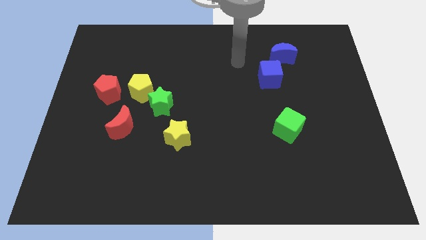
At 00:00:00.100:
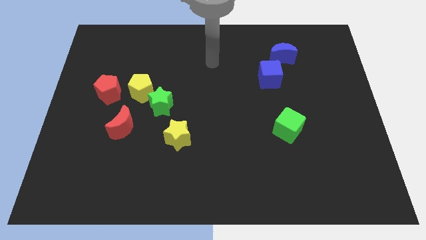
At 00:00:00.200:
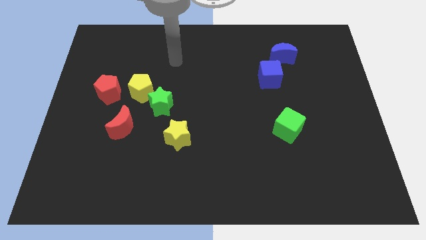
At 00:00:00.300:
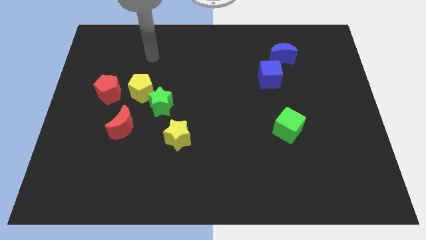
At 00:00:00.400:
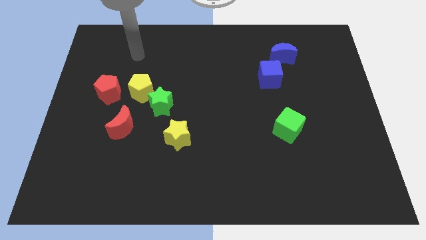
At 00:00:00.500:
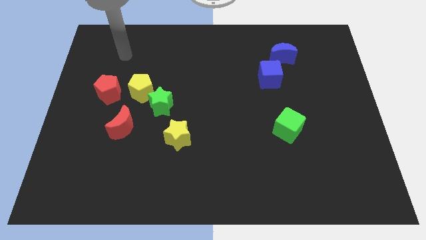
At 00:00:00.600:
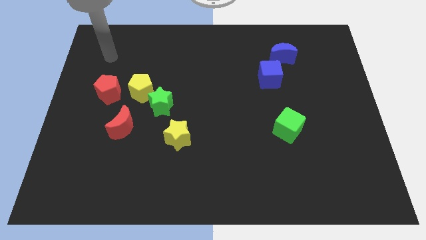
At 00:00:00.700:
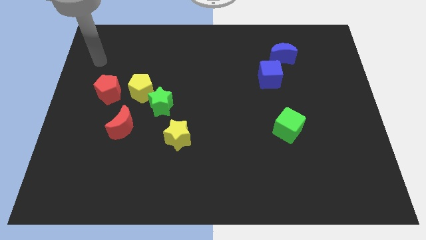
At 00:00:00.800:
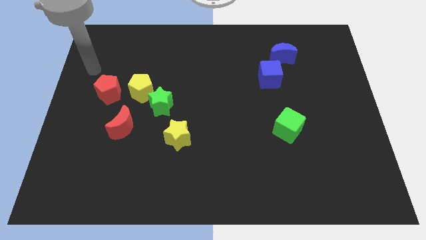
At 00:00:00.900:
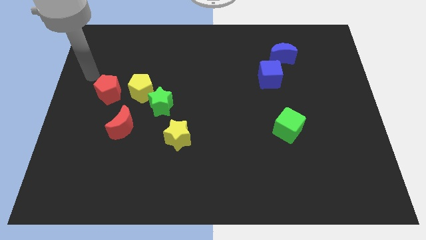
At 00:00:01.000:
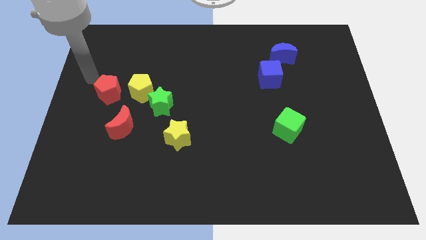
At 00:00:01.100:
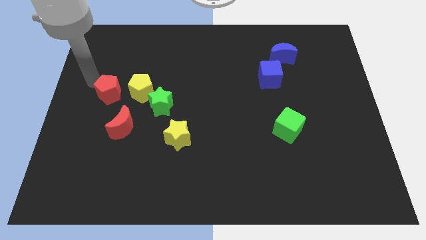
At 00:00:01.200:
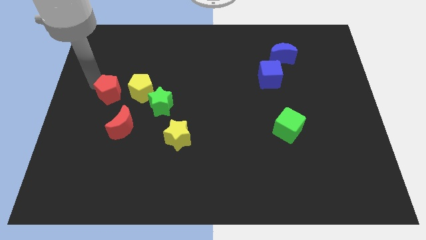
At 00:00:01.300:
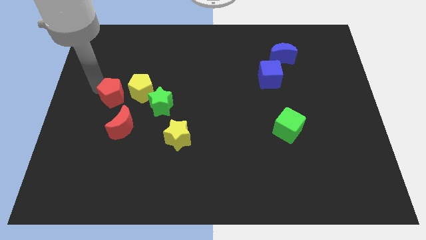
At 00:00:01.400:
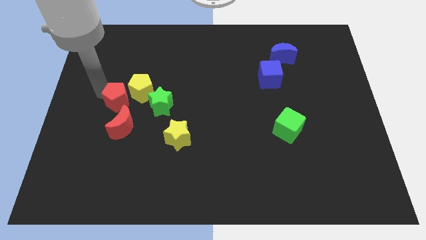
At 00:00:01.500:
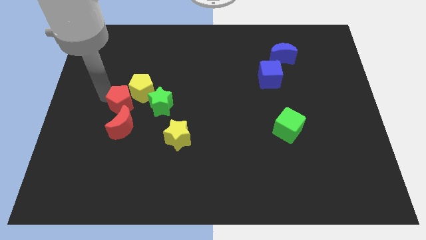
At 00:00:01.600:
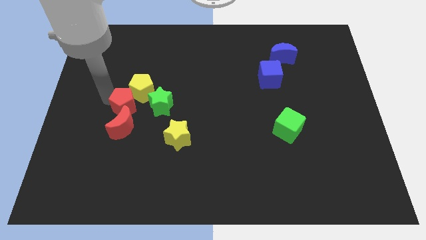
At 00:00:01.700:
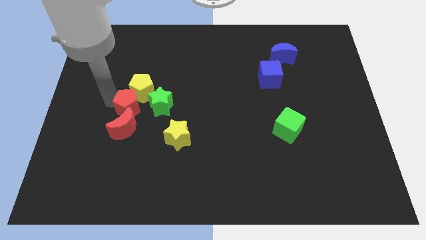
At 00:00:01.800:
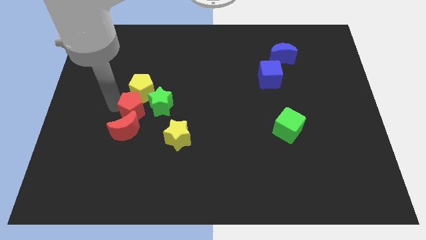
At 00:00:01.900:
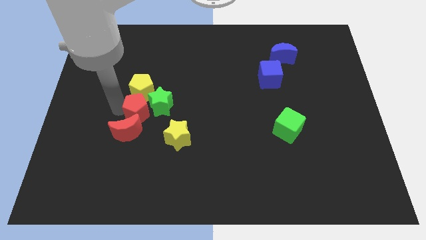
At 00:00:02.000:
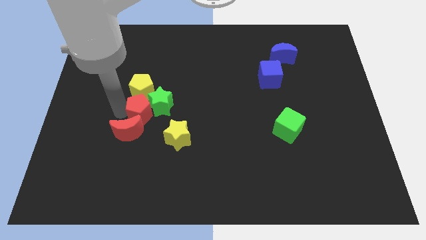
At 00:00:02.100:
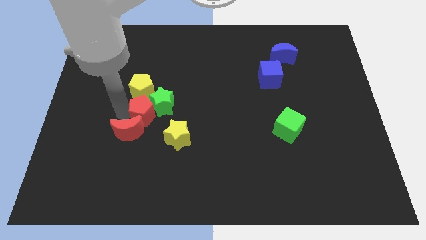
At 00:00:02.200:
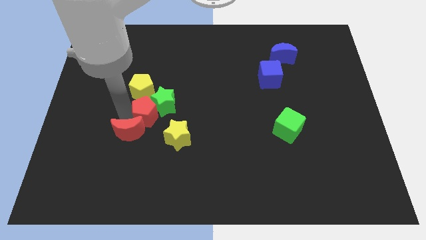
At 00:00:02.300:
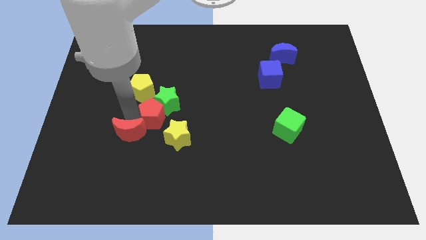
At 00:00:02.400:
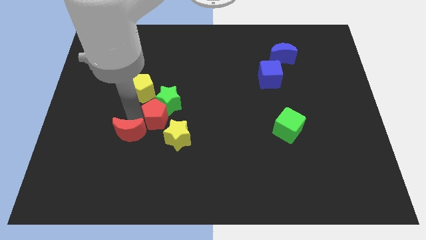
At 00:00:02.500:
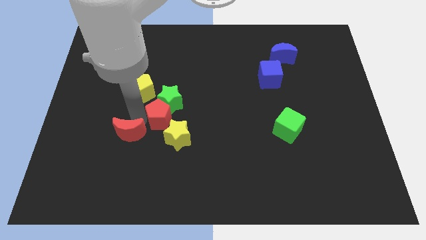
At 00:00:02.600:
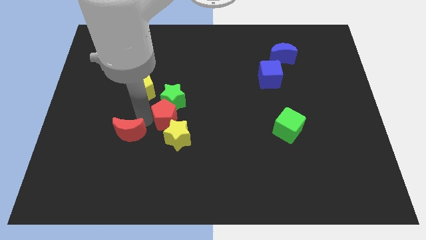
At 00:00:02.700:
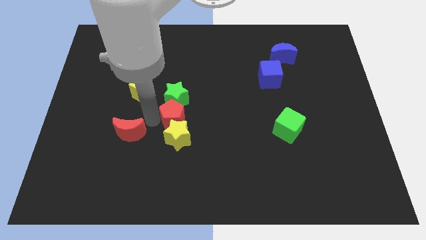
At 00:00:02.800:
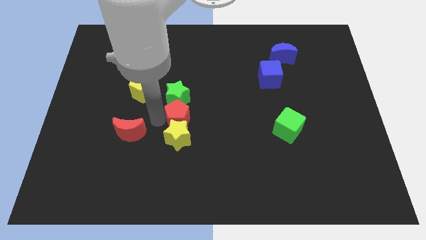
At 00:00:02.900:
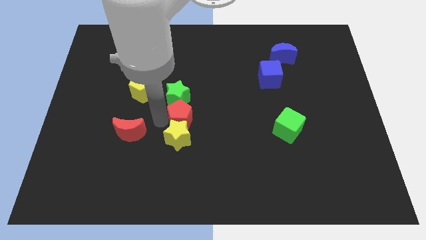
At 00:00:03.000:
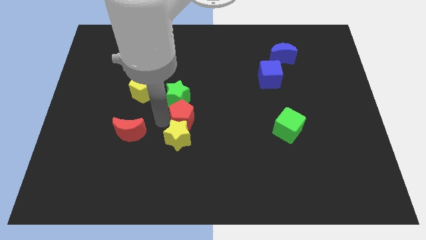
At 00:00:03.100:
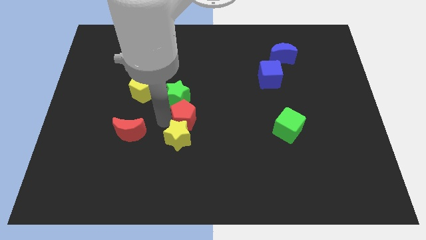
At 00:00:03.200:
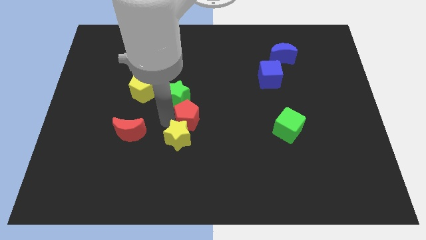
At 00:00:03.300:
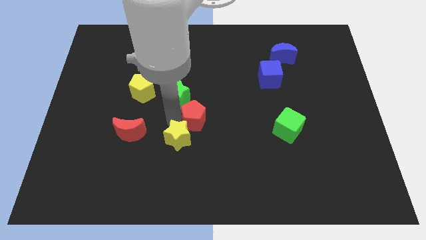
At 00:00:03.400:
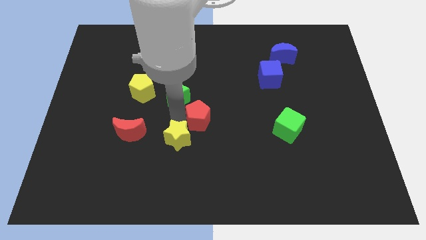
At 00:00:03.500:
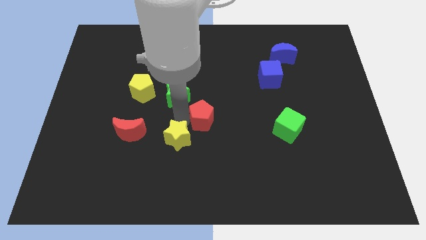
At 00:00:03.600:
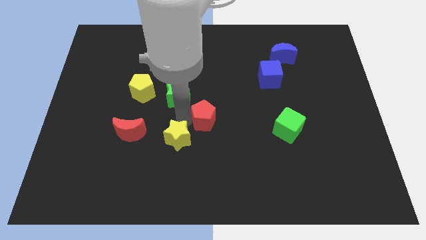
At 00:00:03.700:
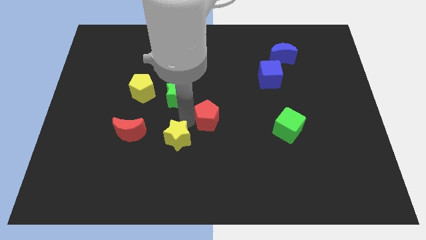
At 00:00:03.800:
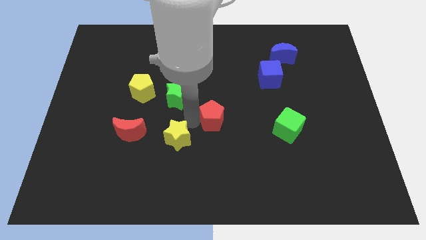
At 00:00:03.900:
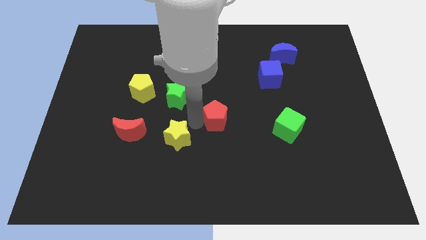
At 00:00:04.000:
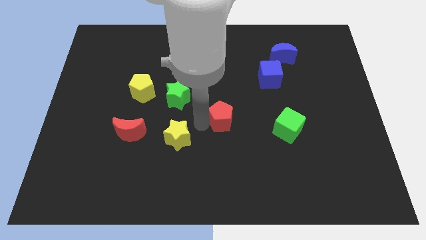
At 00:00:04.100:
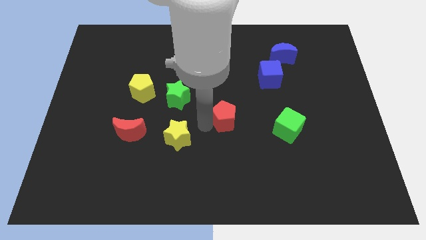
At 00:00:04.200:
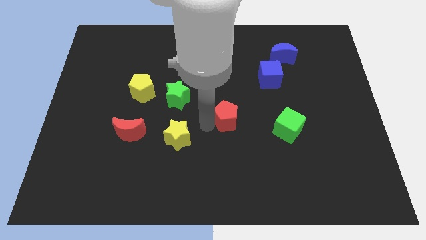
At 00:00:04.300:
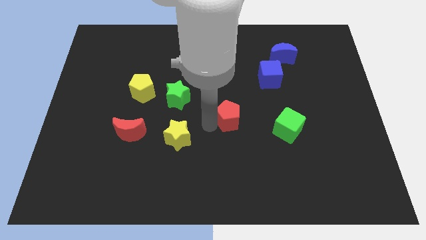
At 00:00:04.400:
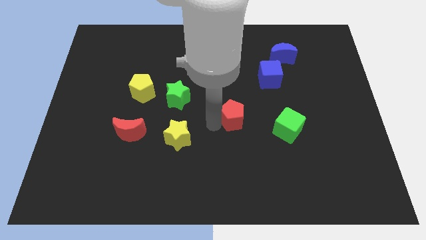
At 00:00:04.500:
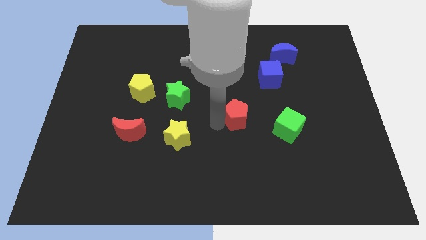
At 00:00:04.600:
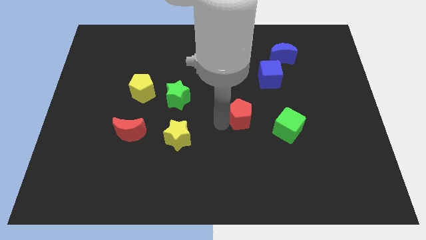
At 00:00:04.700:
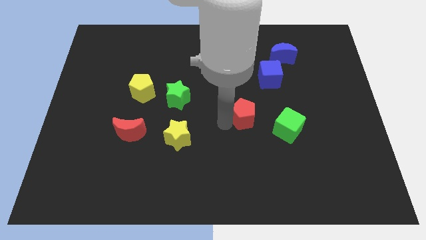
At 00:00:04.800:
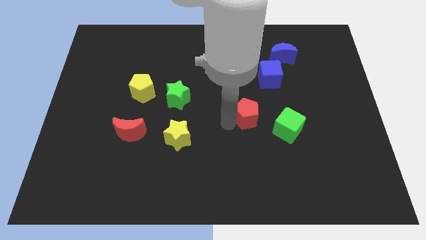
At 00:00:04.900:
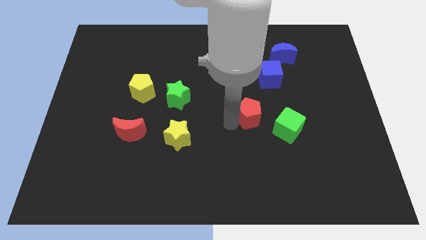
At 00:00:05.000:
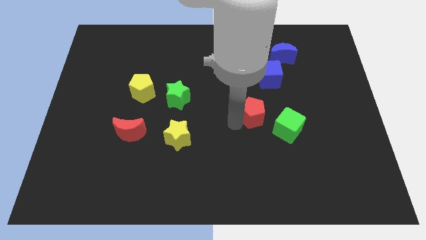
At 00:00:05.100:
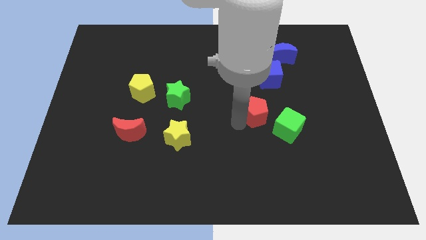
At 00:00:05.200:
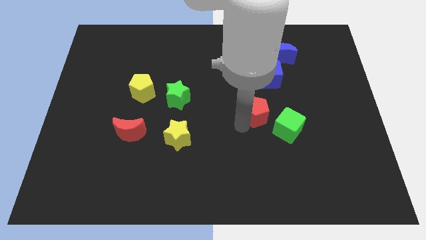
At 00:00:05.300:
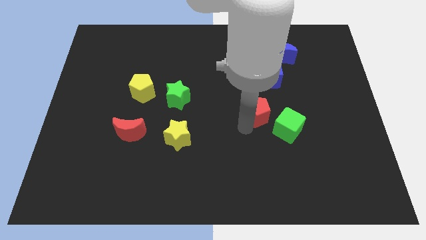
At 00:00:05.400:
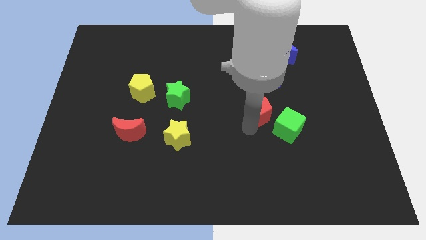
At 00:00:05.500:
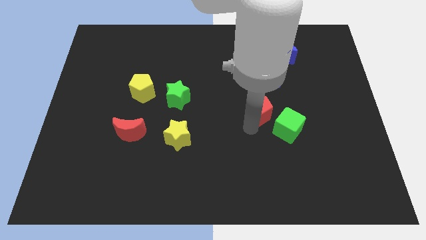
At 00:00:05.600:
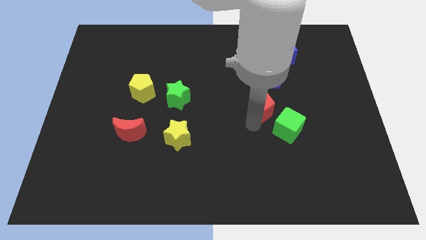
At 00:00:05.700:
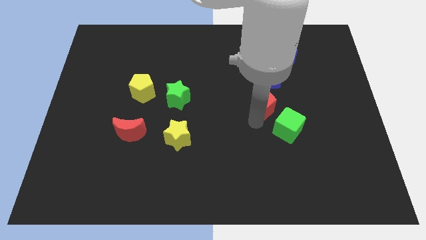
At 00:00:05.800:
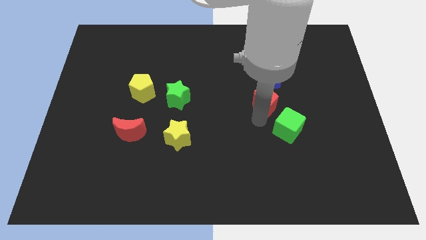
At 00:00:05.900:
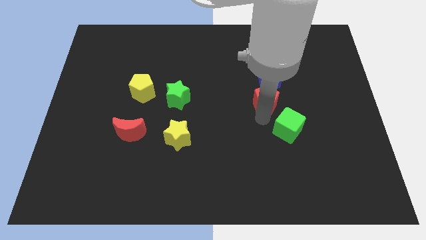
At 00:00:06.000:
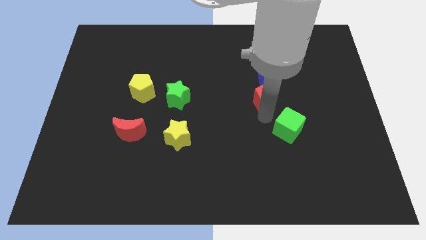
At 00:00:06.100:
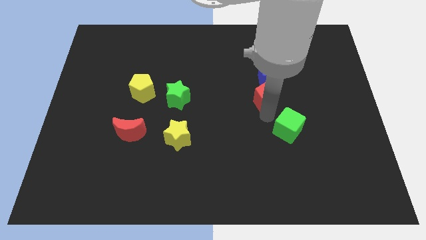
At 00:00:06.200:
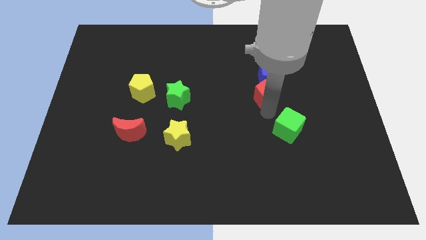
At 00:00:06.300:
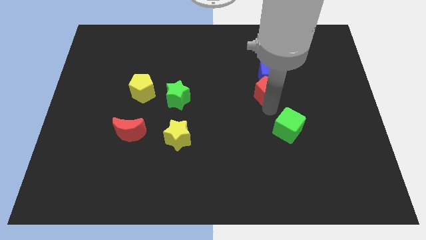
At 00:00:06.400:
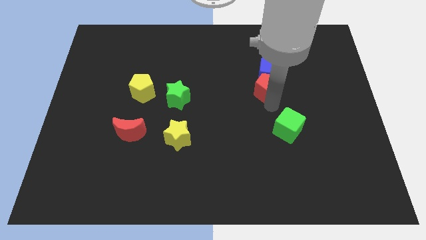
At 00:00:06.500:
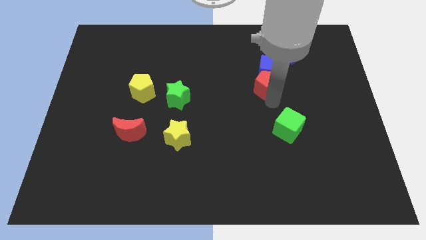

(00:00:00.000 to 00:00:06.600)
put the red pentagon close to the blue cube

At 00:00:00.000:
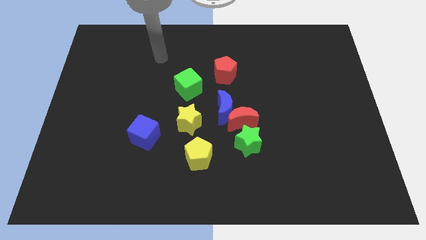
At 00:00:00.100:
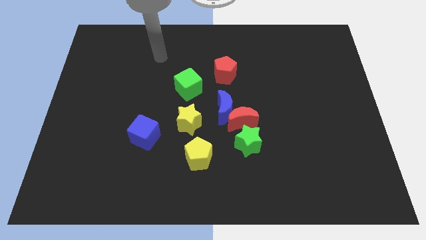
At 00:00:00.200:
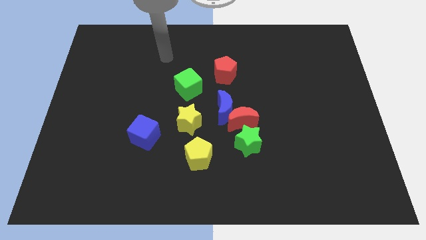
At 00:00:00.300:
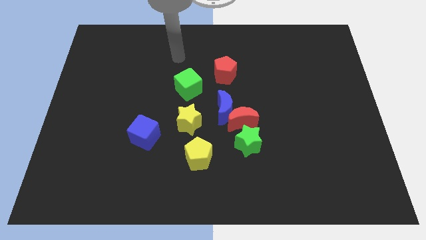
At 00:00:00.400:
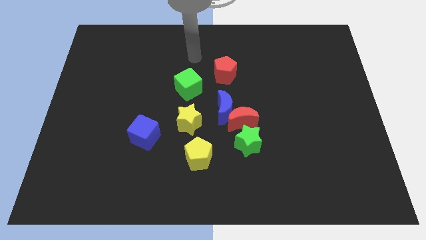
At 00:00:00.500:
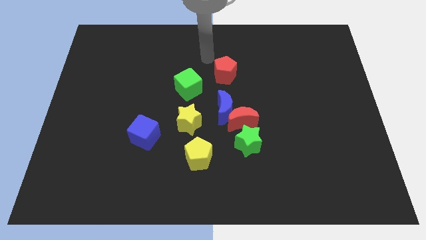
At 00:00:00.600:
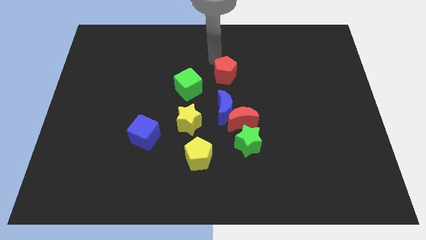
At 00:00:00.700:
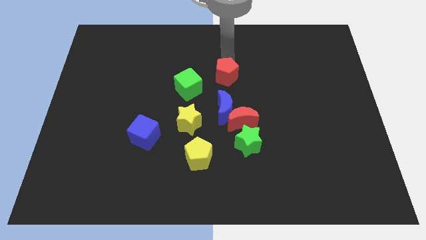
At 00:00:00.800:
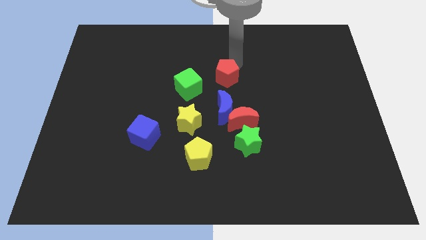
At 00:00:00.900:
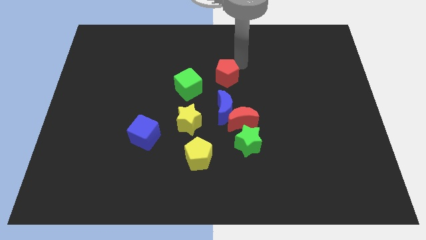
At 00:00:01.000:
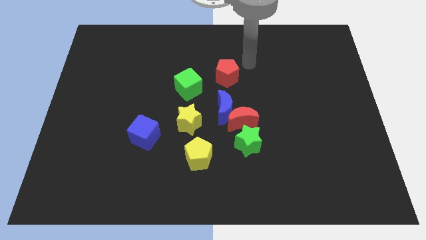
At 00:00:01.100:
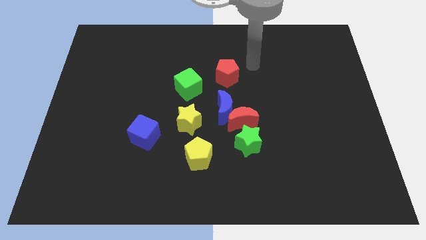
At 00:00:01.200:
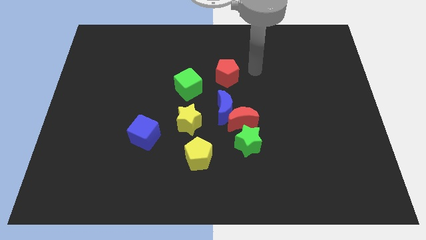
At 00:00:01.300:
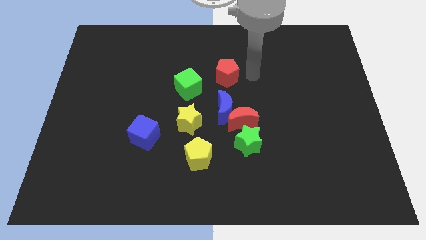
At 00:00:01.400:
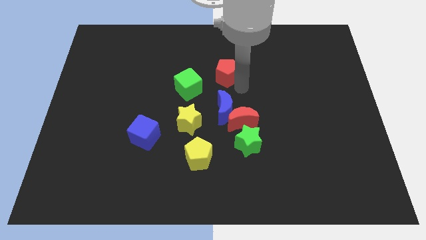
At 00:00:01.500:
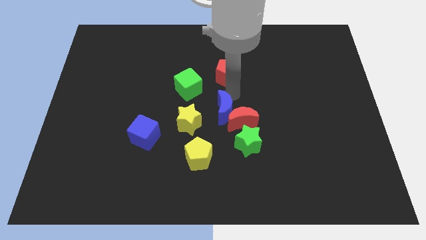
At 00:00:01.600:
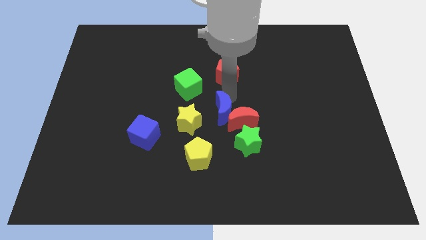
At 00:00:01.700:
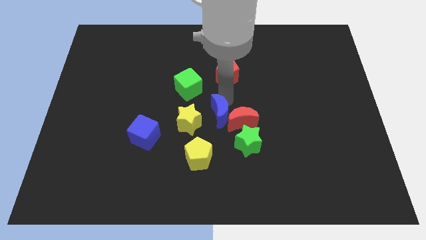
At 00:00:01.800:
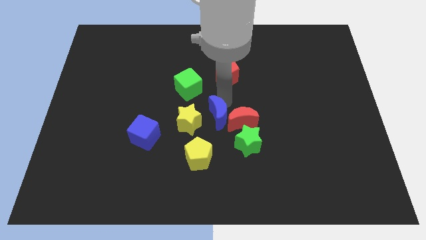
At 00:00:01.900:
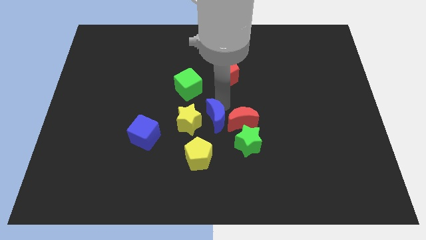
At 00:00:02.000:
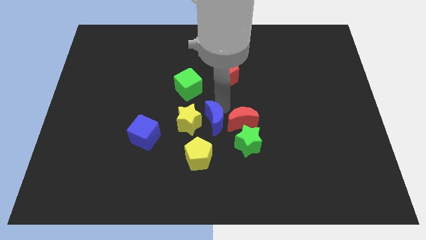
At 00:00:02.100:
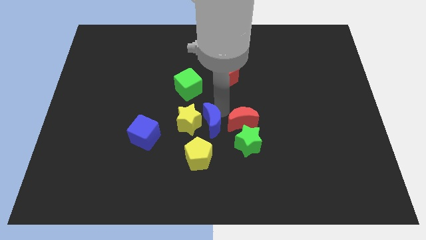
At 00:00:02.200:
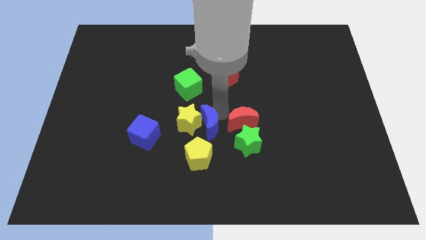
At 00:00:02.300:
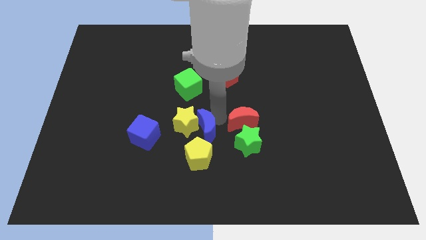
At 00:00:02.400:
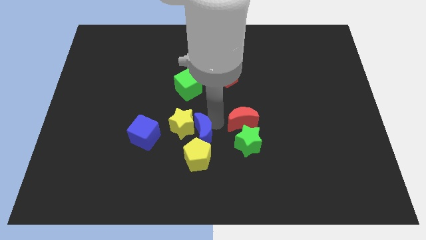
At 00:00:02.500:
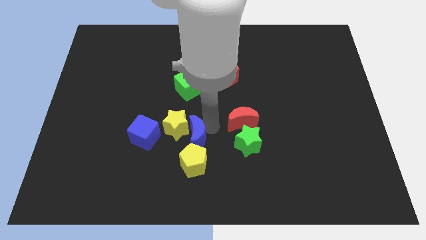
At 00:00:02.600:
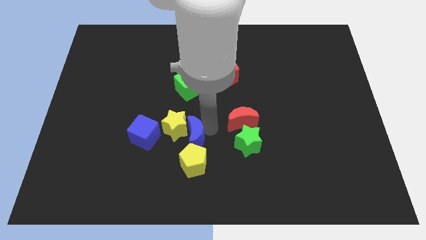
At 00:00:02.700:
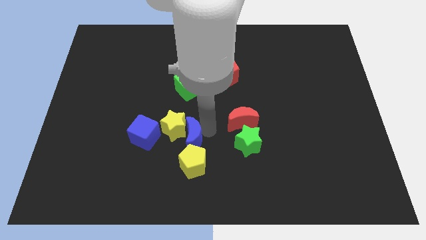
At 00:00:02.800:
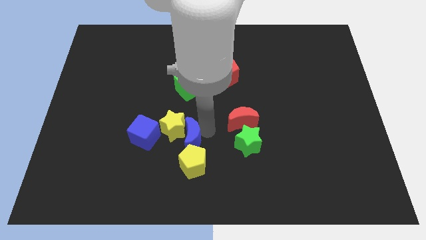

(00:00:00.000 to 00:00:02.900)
put the blue moon to the yellow pentagon
